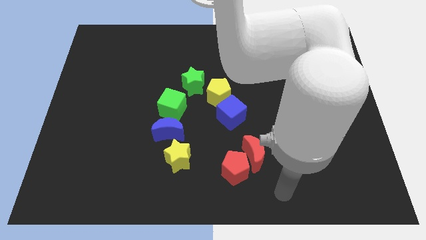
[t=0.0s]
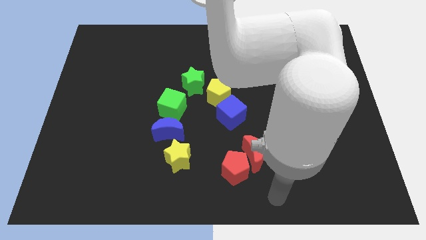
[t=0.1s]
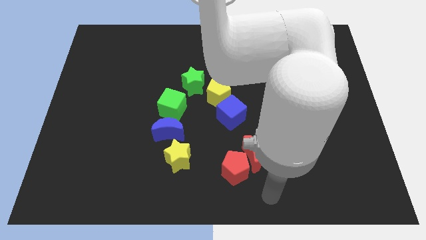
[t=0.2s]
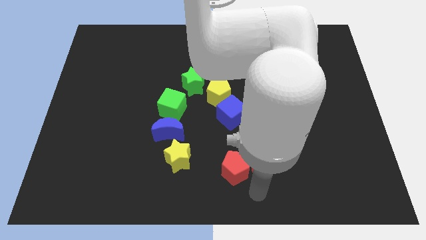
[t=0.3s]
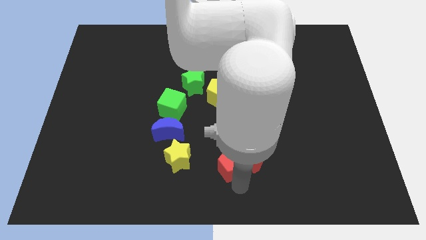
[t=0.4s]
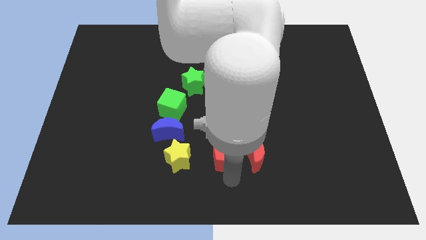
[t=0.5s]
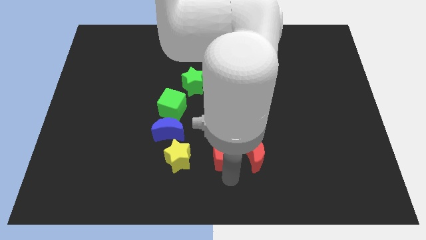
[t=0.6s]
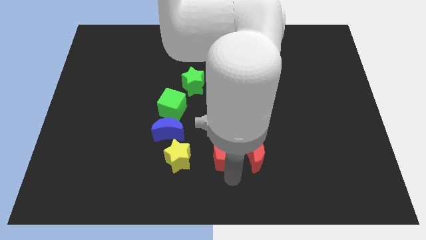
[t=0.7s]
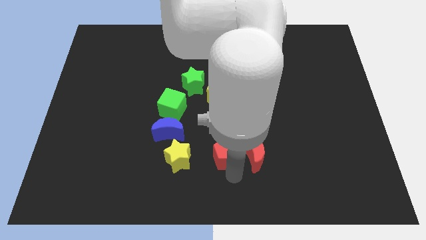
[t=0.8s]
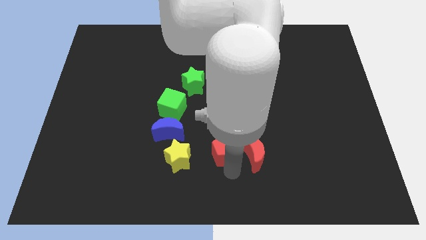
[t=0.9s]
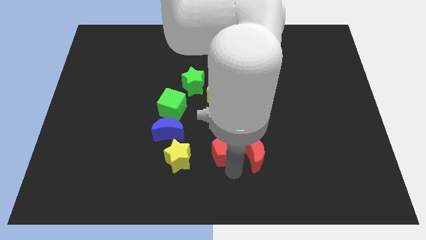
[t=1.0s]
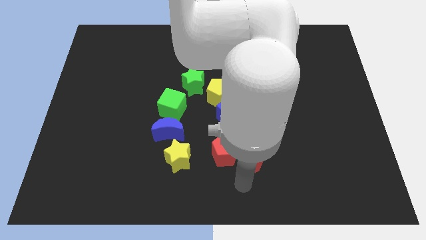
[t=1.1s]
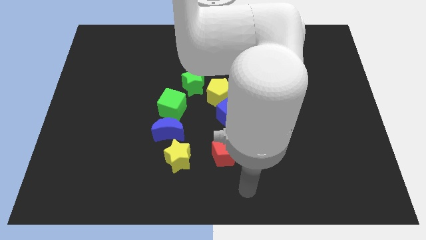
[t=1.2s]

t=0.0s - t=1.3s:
push the red pentagon to the left of the red crescent

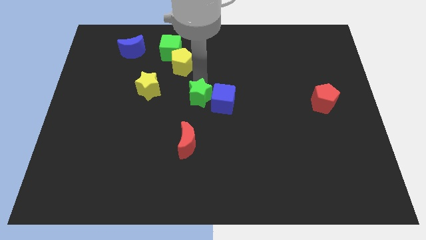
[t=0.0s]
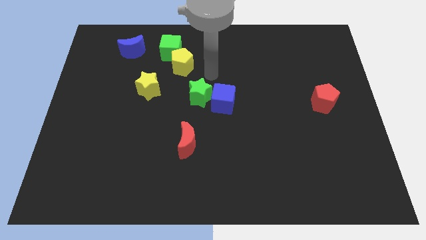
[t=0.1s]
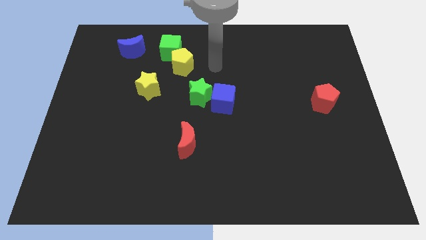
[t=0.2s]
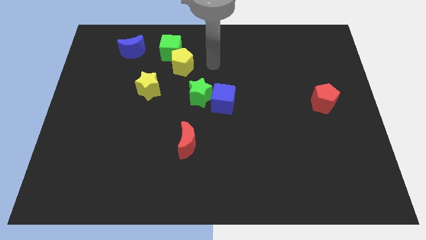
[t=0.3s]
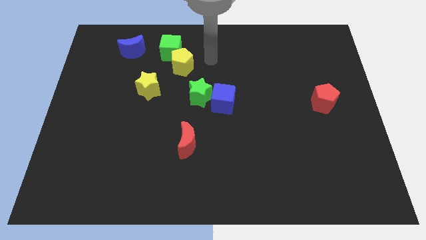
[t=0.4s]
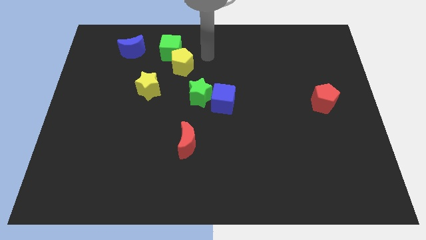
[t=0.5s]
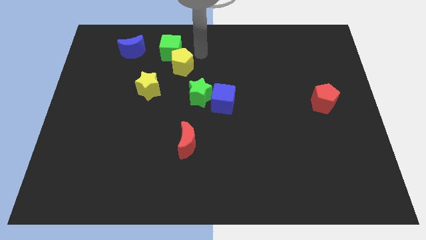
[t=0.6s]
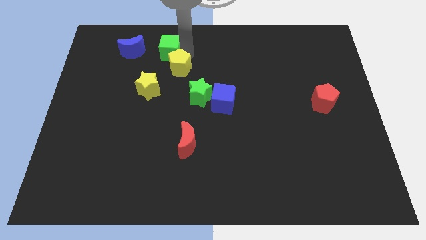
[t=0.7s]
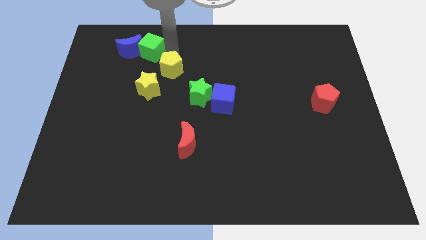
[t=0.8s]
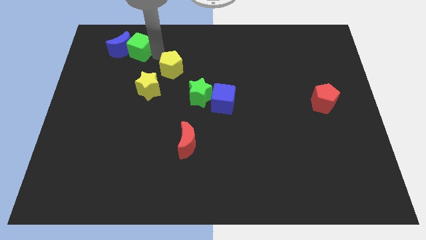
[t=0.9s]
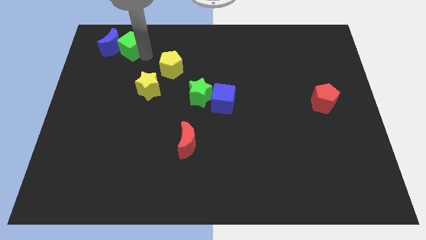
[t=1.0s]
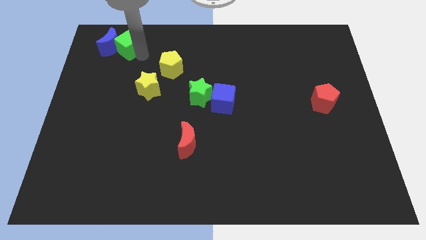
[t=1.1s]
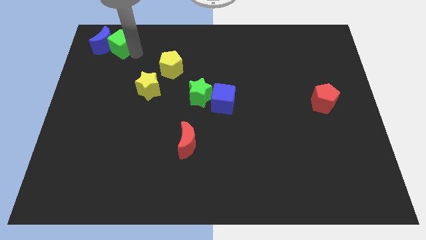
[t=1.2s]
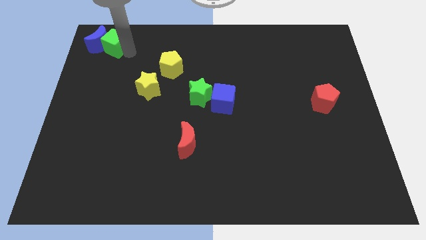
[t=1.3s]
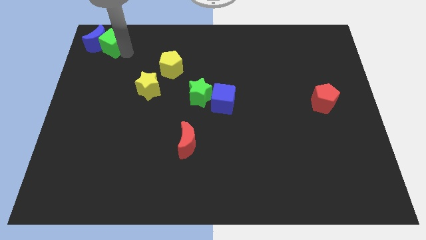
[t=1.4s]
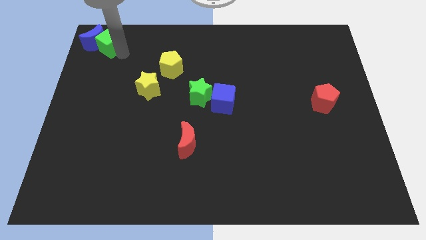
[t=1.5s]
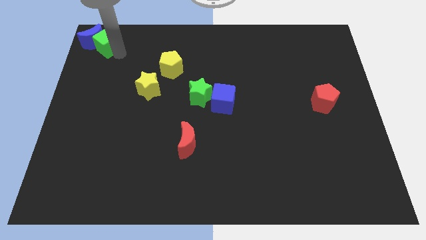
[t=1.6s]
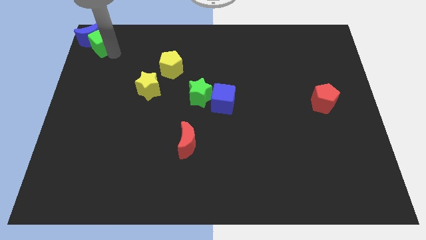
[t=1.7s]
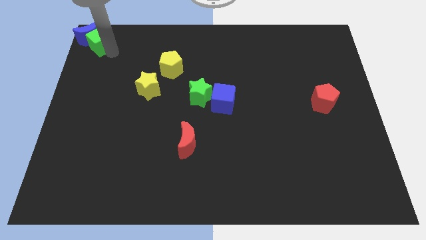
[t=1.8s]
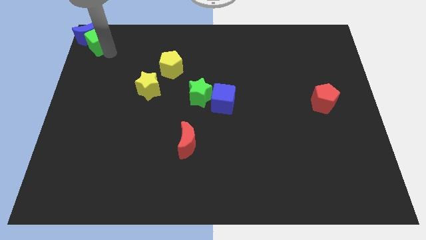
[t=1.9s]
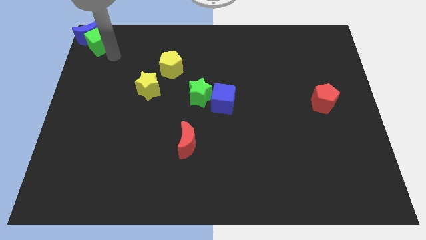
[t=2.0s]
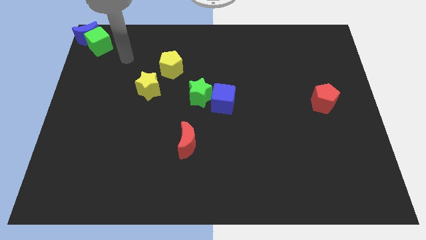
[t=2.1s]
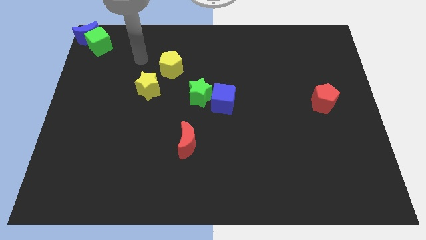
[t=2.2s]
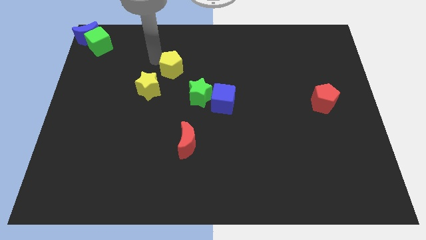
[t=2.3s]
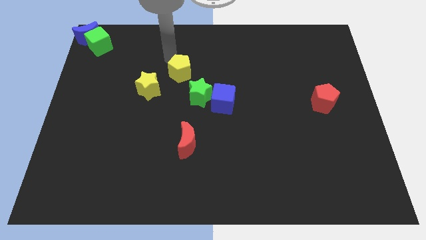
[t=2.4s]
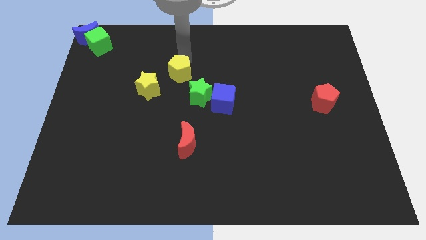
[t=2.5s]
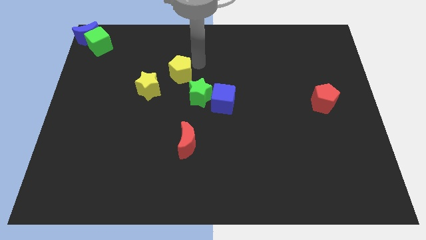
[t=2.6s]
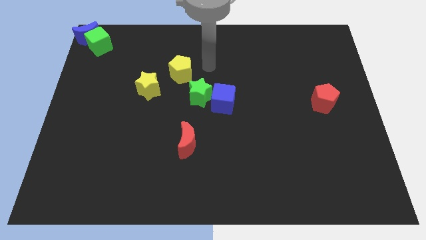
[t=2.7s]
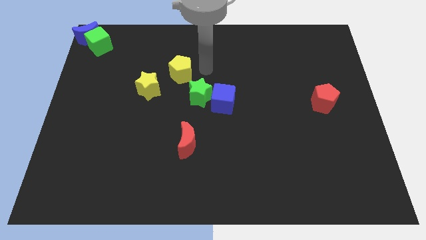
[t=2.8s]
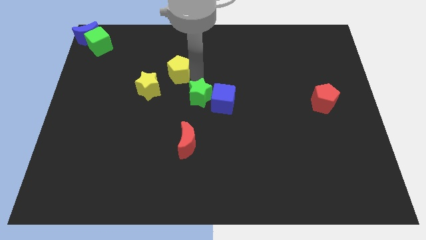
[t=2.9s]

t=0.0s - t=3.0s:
push the green cube along the blue crescent to the top left to the board

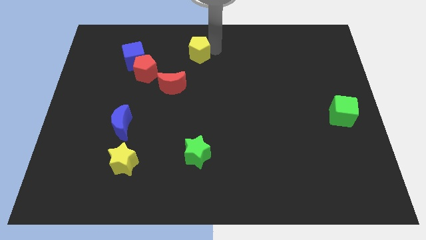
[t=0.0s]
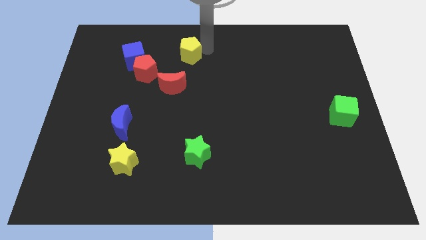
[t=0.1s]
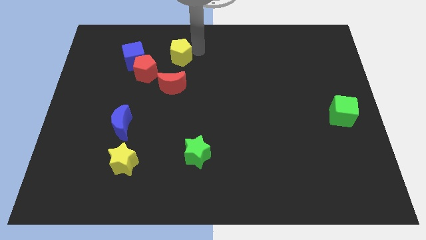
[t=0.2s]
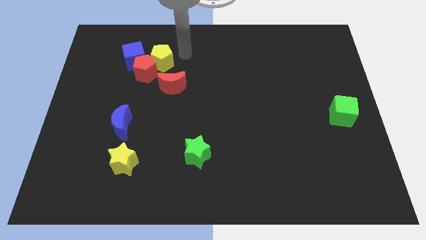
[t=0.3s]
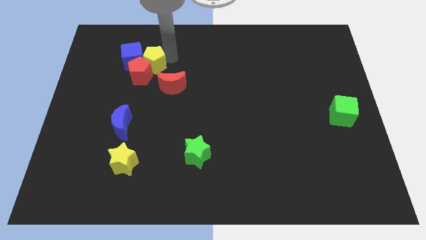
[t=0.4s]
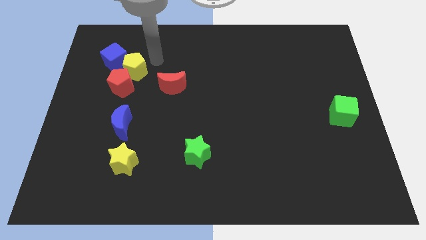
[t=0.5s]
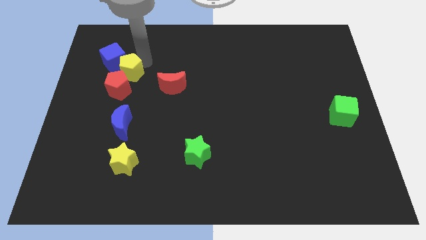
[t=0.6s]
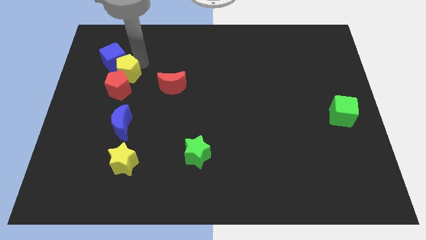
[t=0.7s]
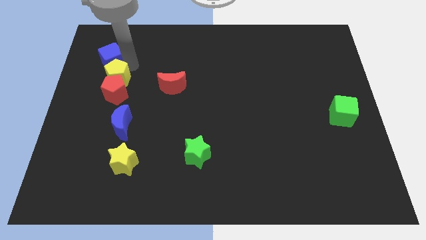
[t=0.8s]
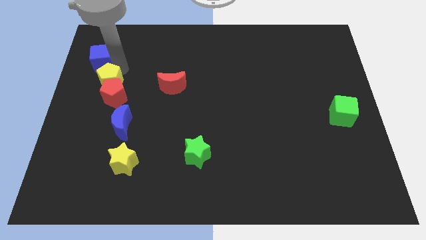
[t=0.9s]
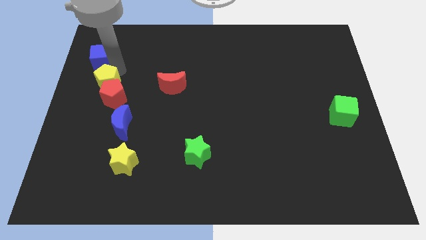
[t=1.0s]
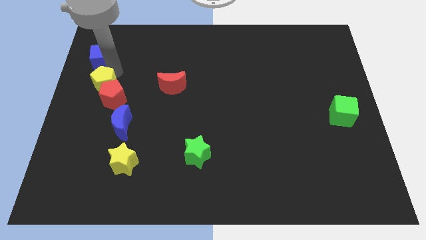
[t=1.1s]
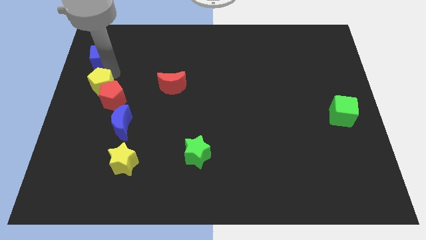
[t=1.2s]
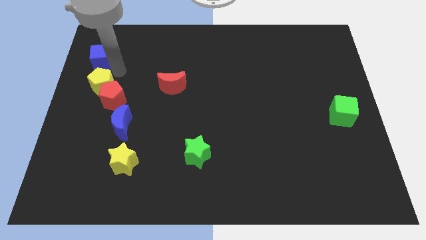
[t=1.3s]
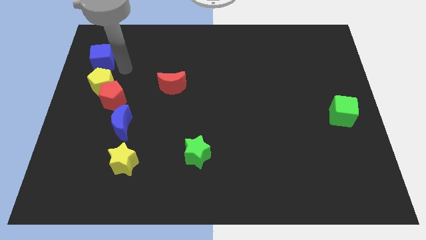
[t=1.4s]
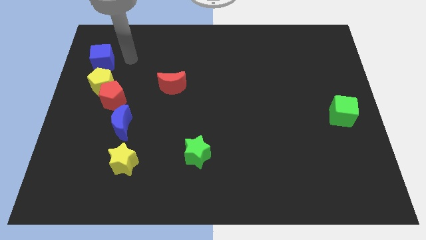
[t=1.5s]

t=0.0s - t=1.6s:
push the yellow and red pentagons between blue blocks

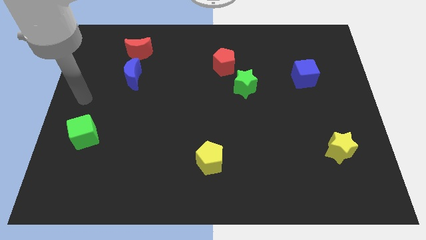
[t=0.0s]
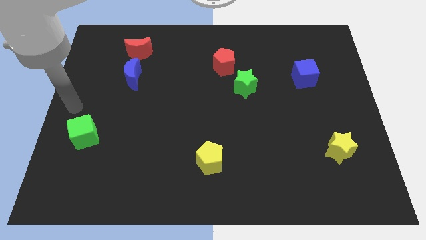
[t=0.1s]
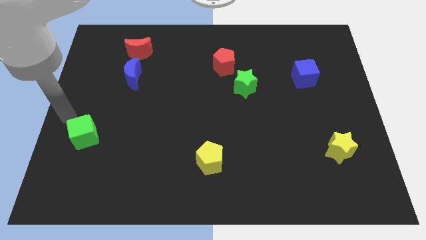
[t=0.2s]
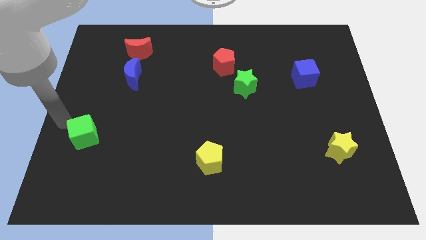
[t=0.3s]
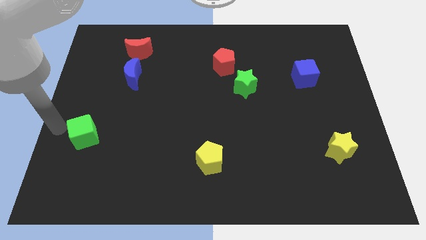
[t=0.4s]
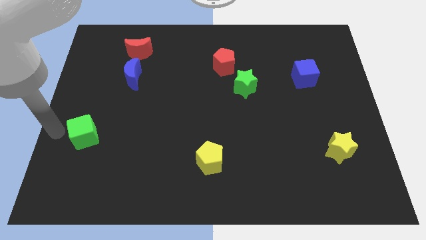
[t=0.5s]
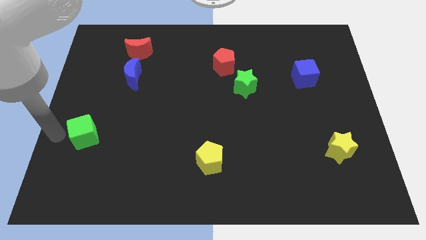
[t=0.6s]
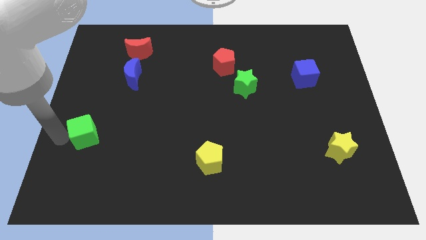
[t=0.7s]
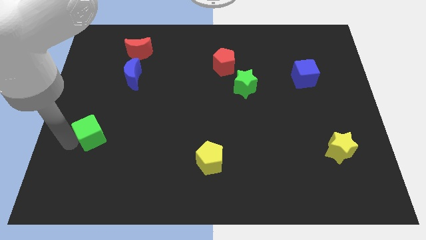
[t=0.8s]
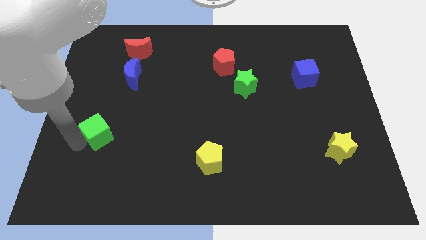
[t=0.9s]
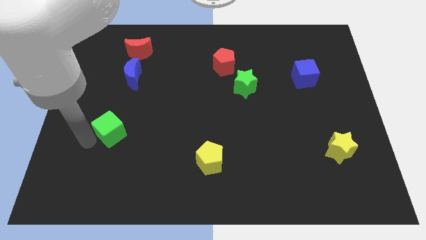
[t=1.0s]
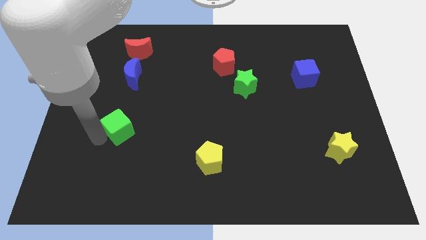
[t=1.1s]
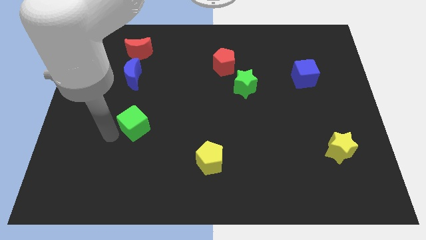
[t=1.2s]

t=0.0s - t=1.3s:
put the green cube vertically below the blue moon

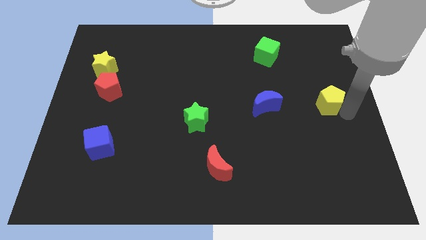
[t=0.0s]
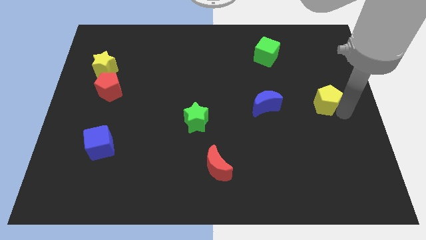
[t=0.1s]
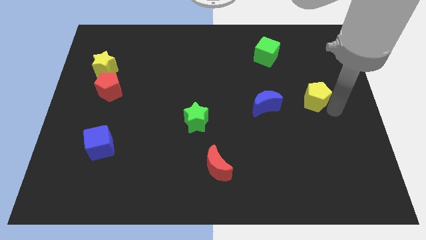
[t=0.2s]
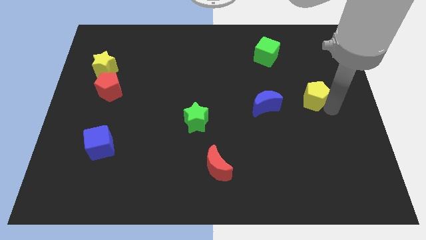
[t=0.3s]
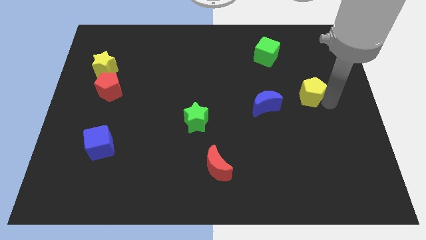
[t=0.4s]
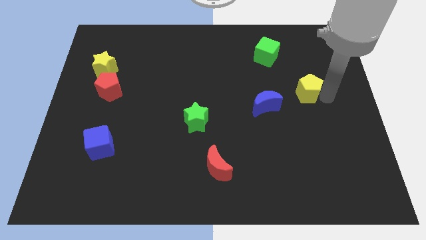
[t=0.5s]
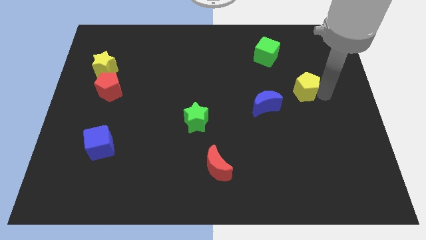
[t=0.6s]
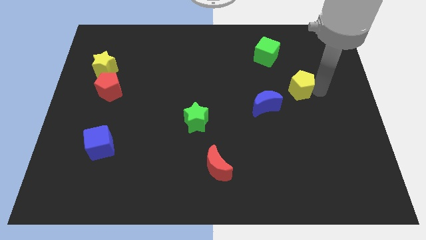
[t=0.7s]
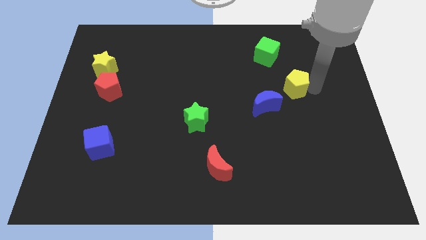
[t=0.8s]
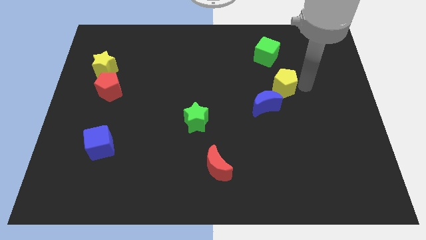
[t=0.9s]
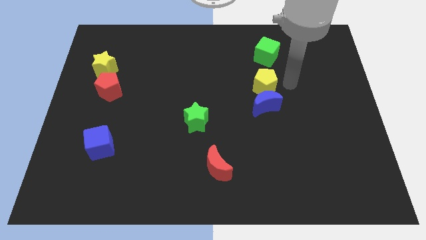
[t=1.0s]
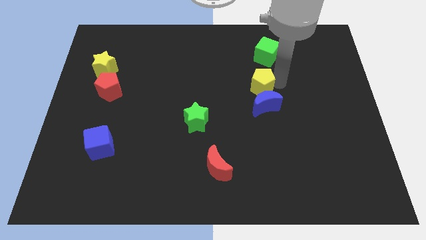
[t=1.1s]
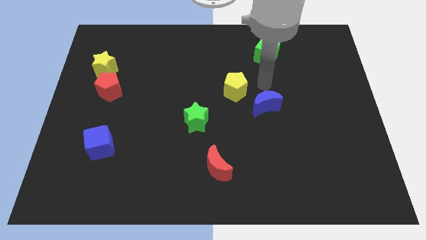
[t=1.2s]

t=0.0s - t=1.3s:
place yellow pentagon in between green cube and blue moon
